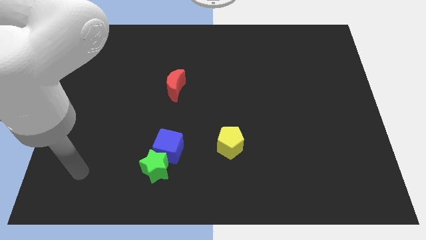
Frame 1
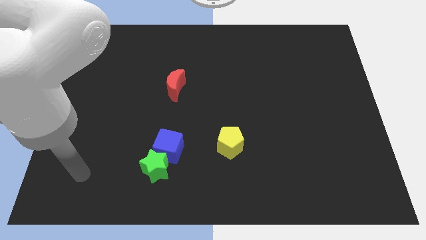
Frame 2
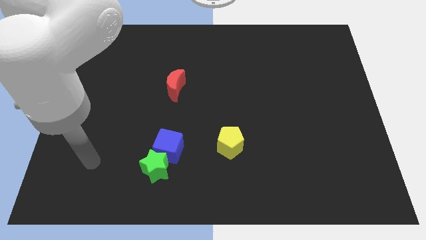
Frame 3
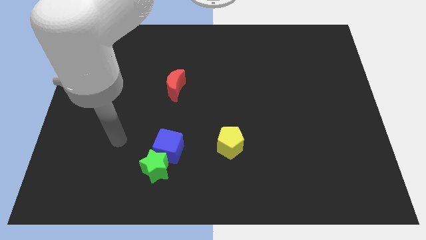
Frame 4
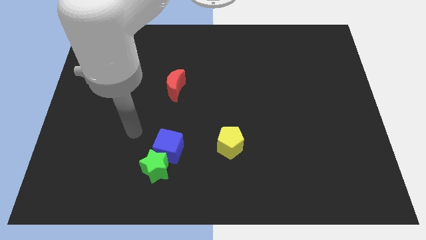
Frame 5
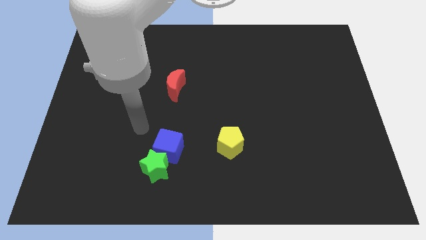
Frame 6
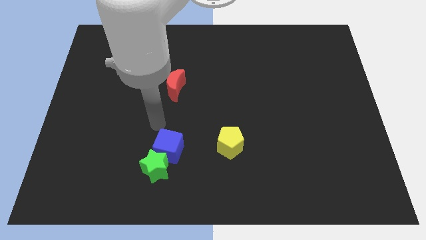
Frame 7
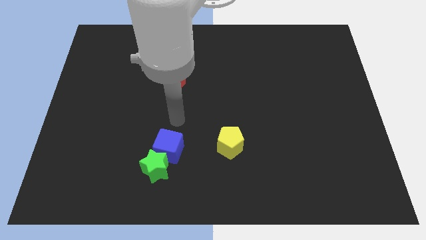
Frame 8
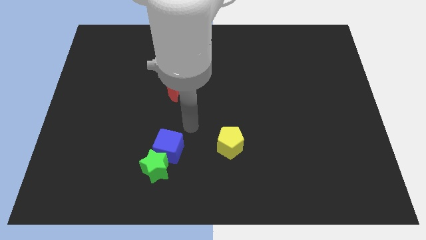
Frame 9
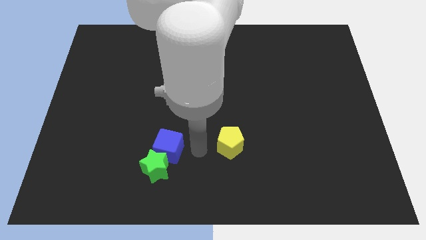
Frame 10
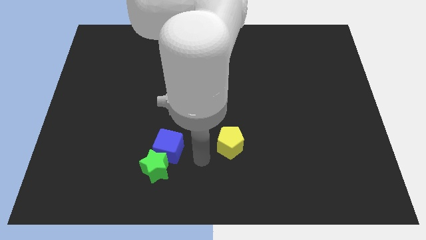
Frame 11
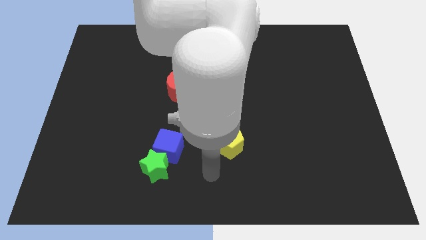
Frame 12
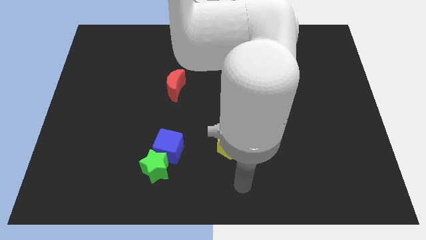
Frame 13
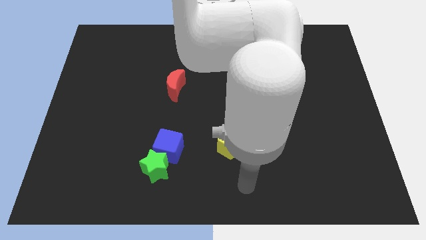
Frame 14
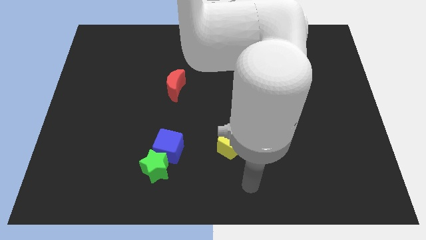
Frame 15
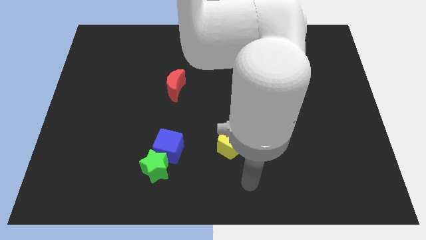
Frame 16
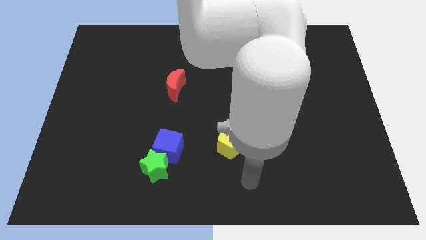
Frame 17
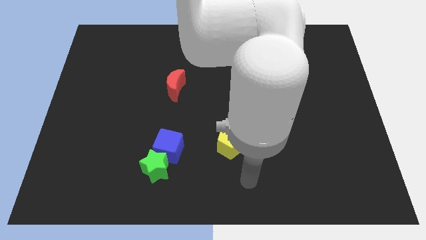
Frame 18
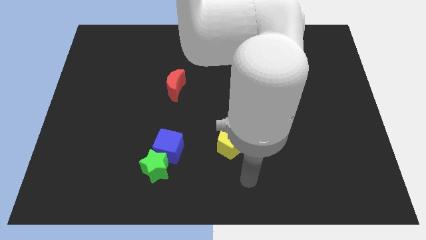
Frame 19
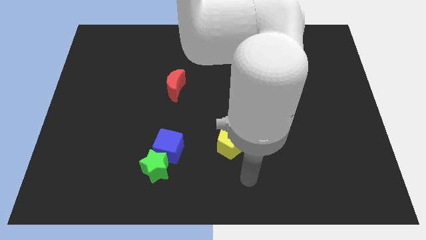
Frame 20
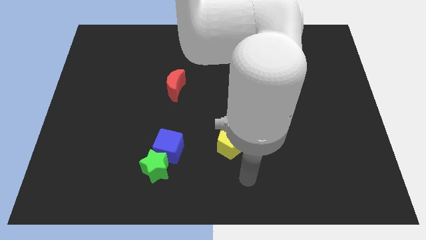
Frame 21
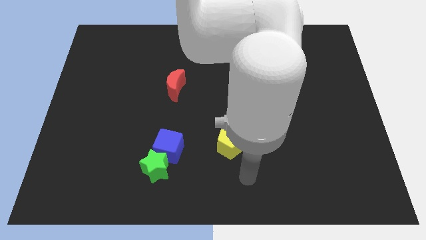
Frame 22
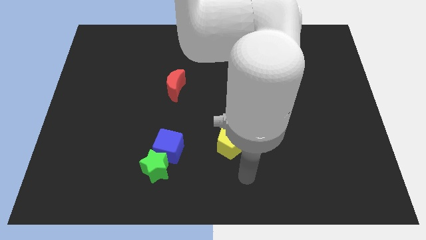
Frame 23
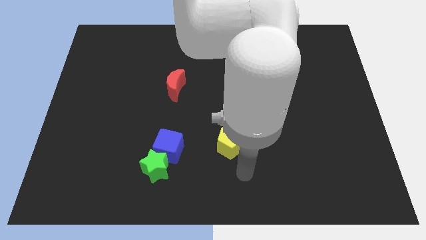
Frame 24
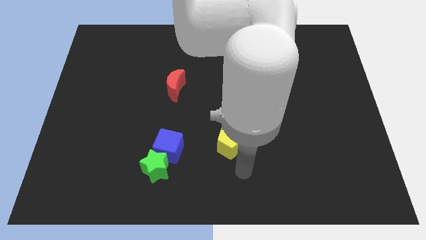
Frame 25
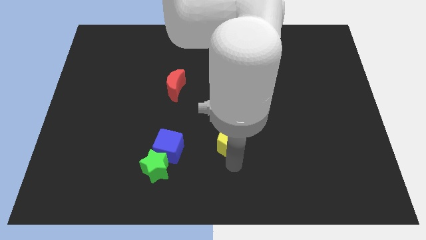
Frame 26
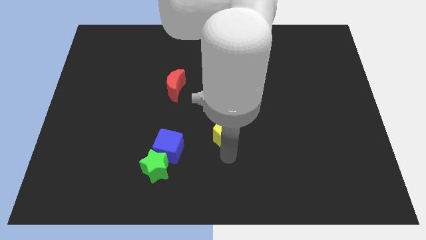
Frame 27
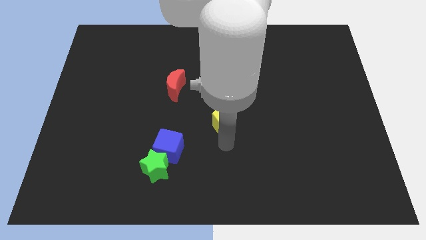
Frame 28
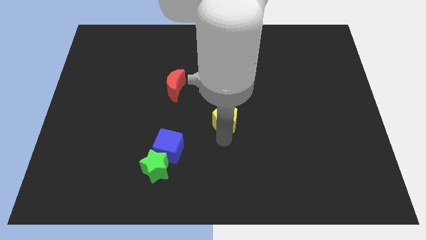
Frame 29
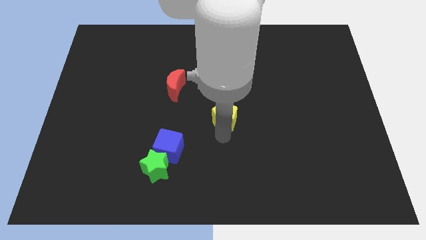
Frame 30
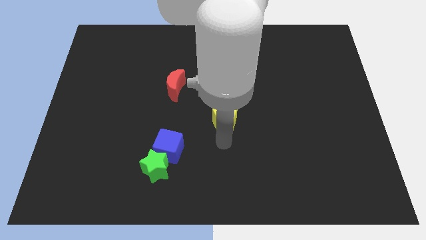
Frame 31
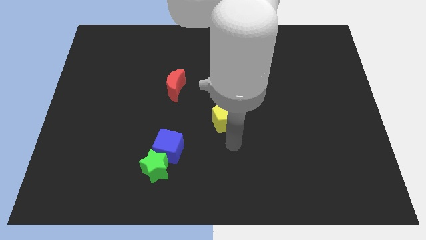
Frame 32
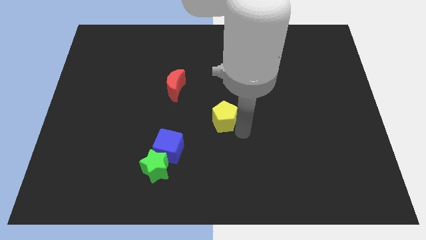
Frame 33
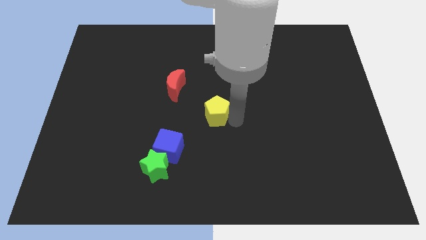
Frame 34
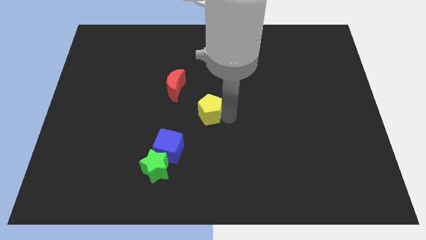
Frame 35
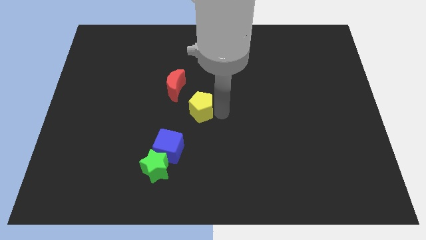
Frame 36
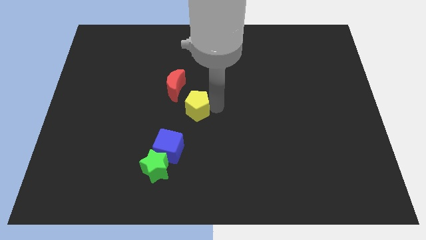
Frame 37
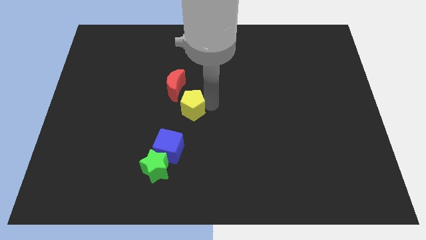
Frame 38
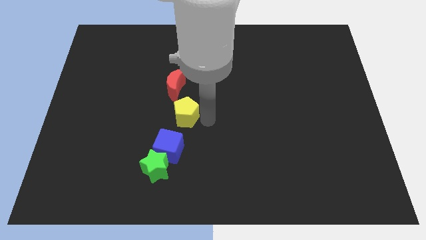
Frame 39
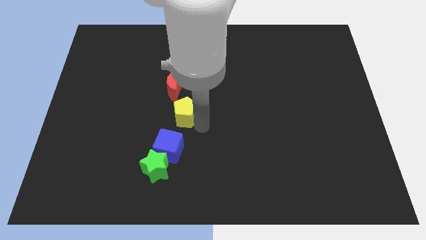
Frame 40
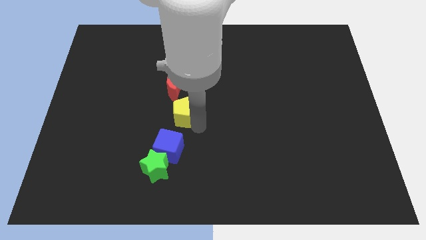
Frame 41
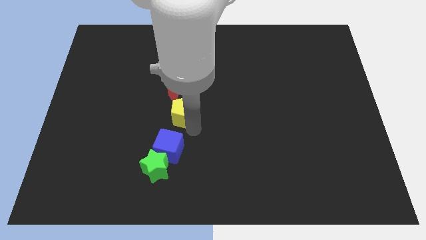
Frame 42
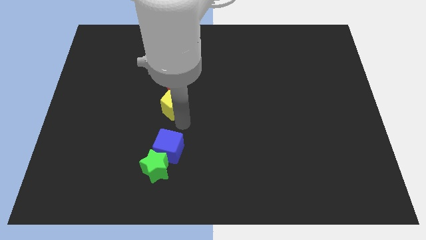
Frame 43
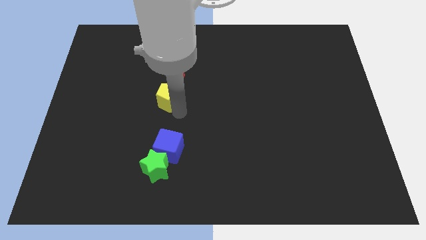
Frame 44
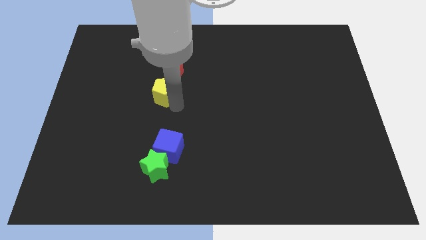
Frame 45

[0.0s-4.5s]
move the yellow block close to the red block

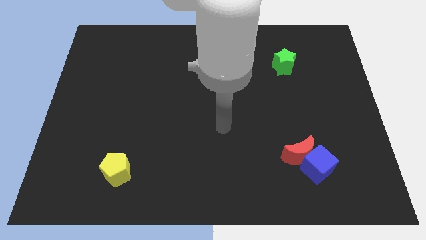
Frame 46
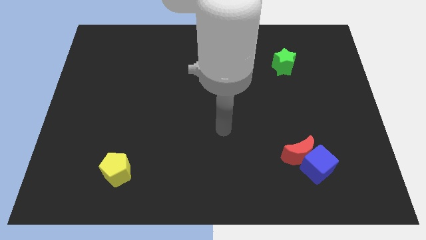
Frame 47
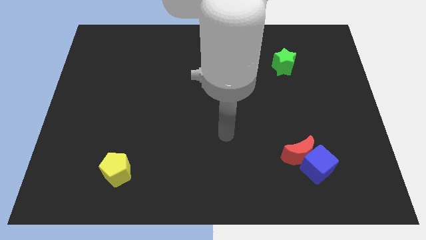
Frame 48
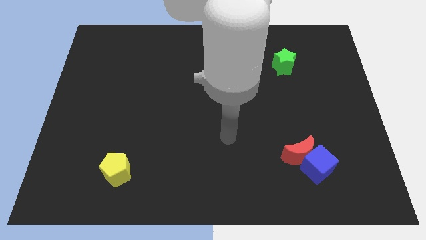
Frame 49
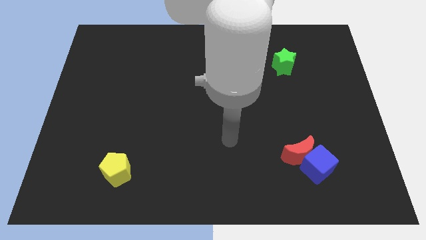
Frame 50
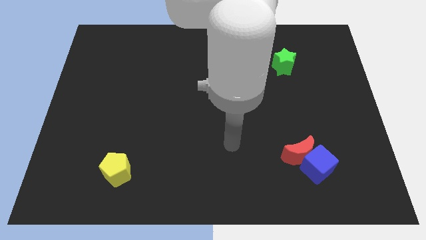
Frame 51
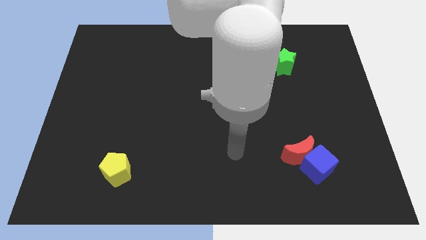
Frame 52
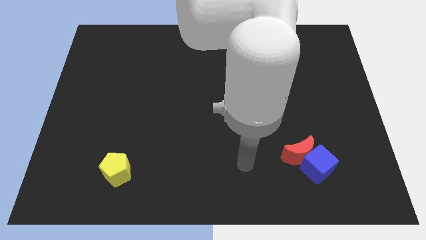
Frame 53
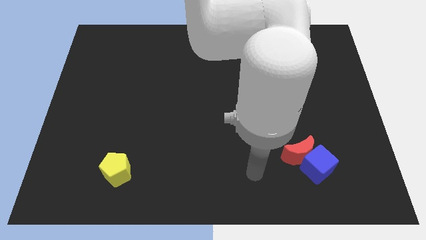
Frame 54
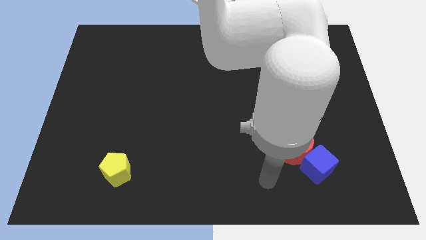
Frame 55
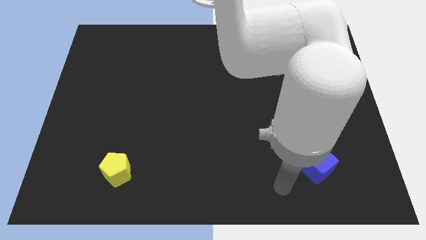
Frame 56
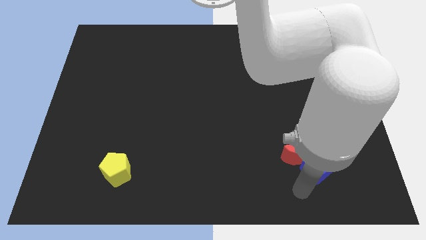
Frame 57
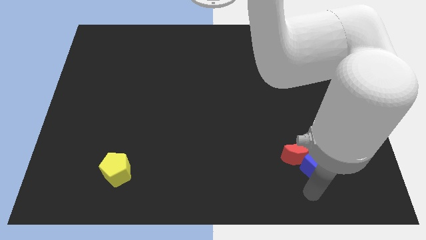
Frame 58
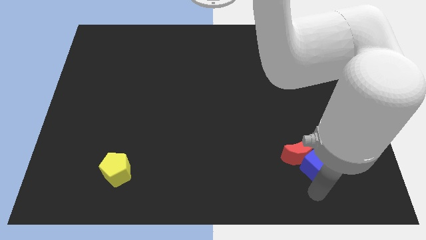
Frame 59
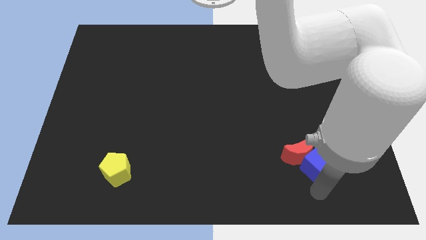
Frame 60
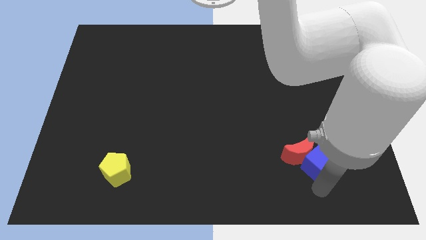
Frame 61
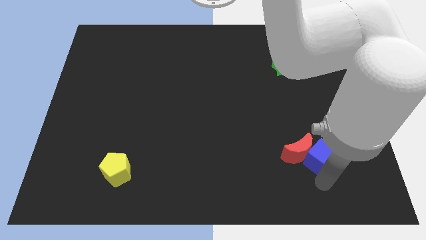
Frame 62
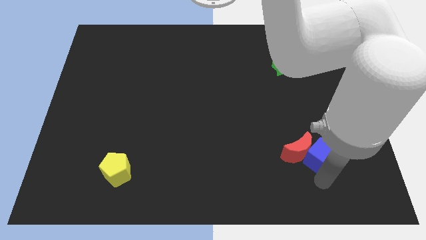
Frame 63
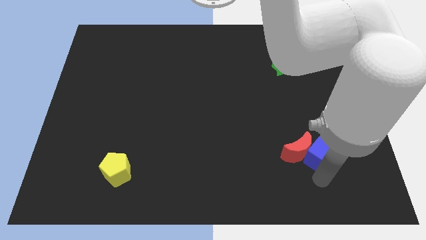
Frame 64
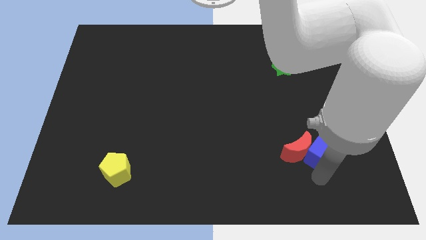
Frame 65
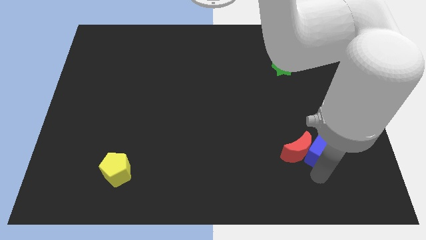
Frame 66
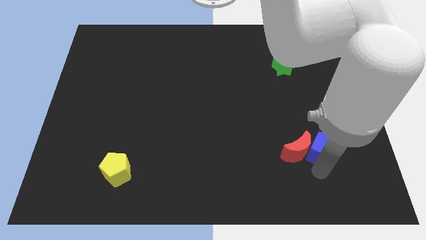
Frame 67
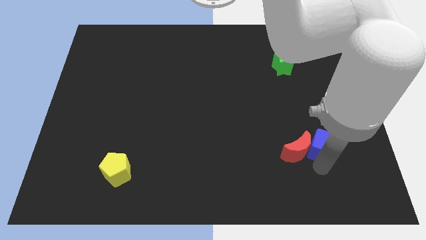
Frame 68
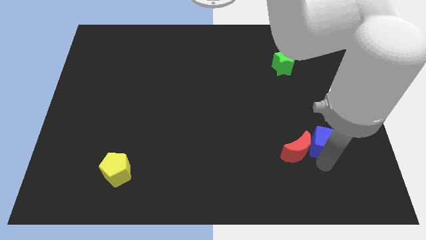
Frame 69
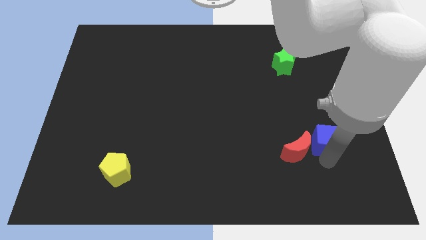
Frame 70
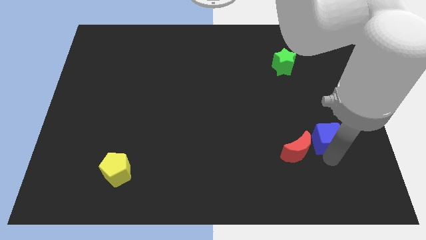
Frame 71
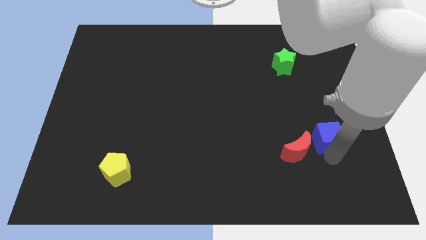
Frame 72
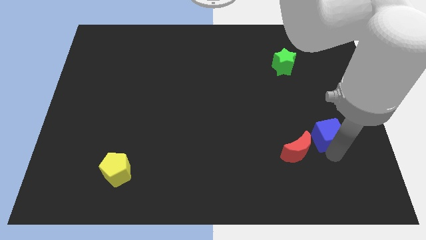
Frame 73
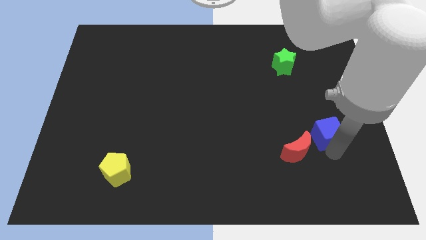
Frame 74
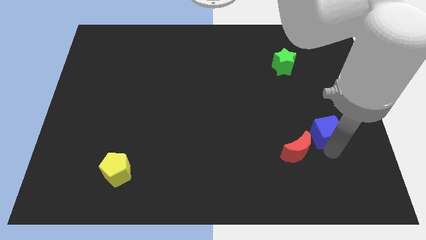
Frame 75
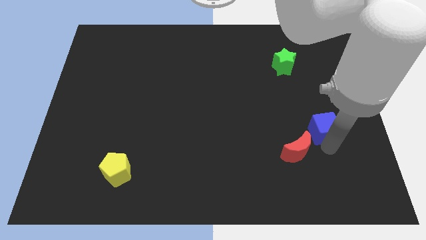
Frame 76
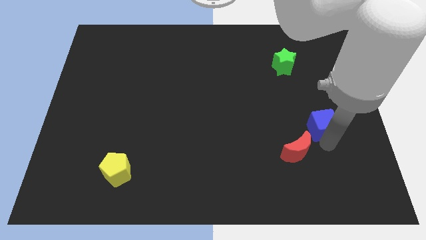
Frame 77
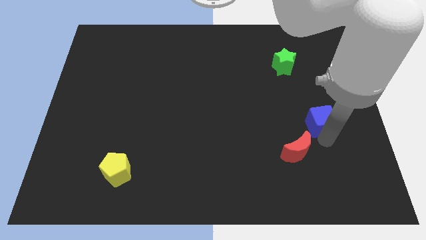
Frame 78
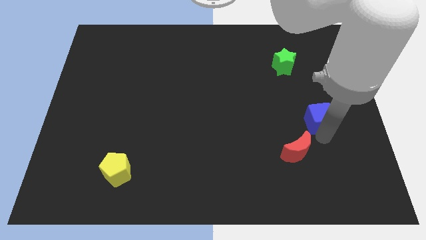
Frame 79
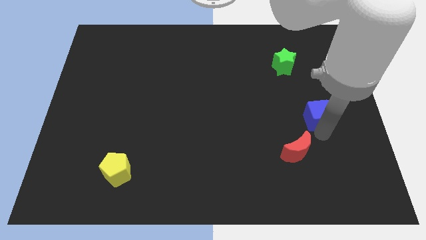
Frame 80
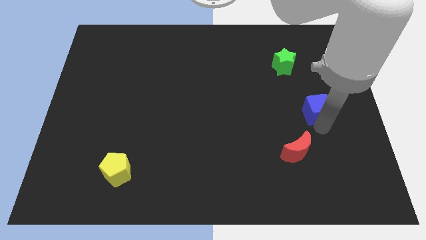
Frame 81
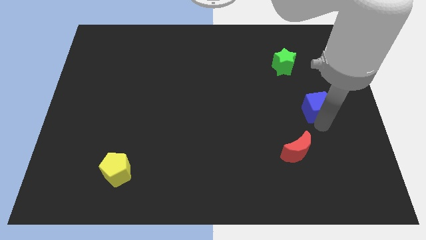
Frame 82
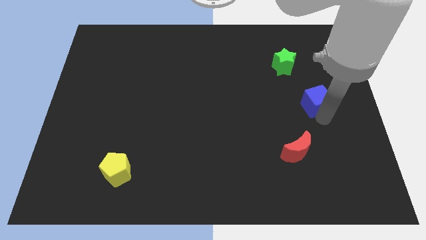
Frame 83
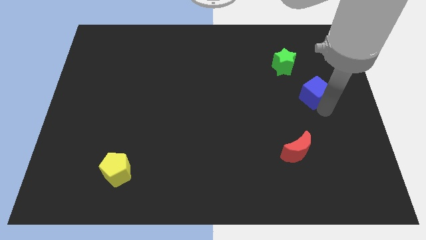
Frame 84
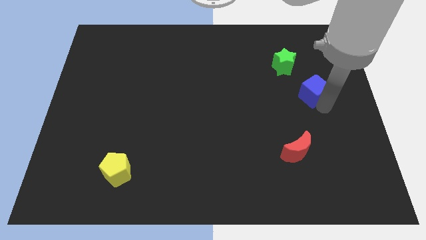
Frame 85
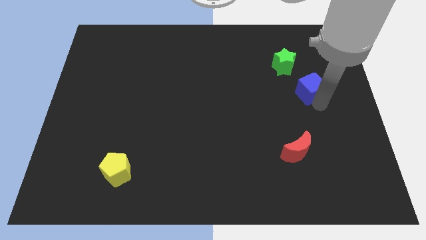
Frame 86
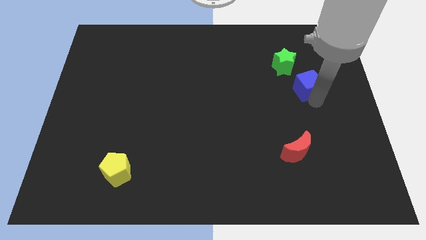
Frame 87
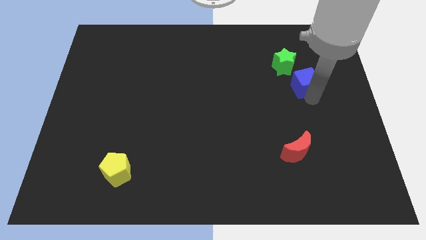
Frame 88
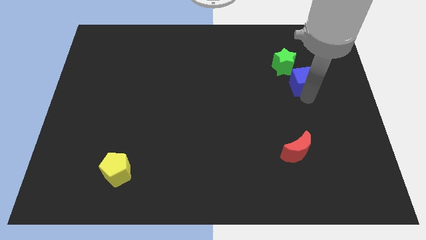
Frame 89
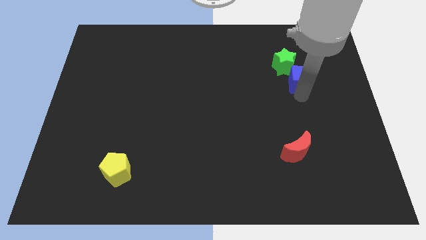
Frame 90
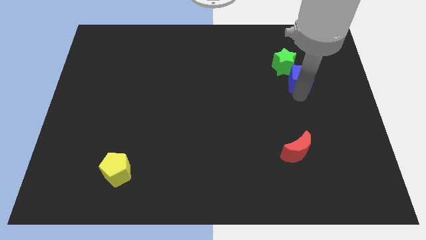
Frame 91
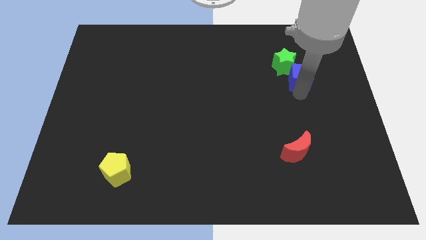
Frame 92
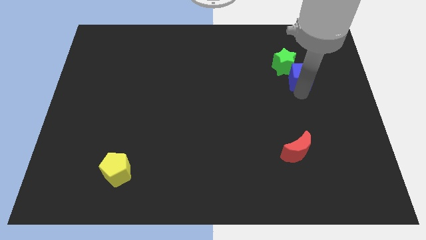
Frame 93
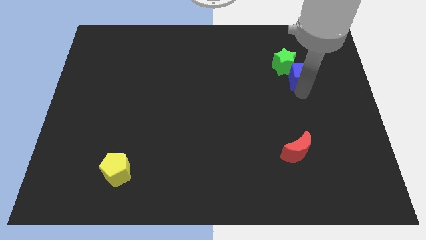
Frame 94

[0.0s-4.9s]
push the cube close to the star
